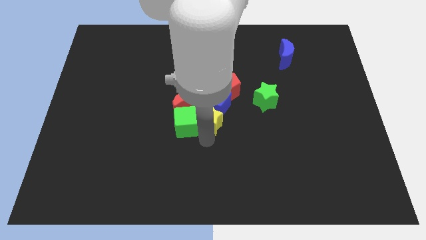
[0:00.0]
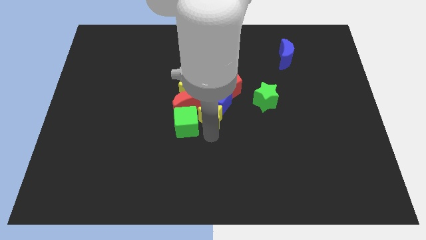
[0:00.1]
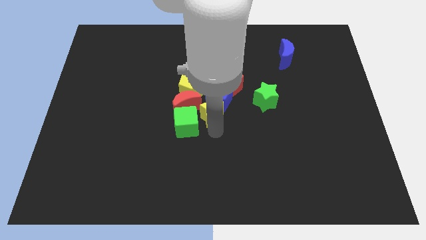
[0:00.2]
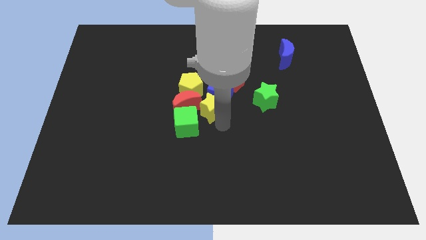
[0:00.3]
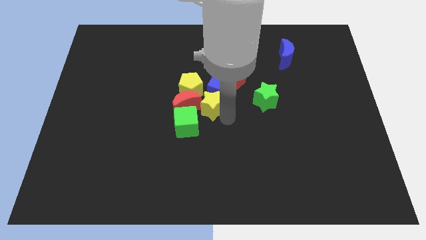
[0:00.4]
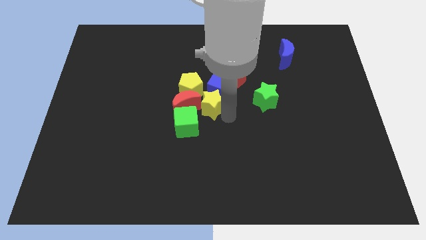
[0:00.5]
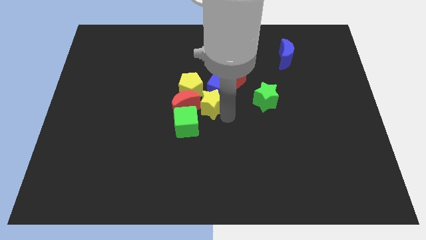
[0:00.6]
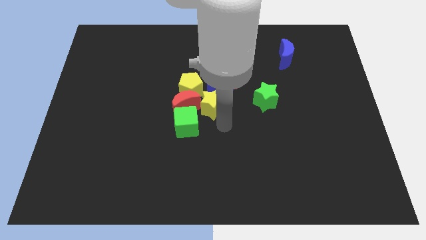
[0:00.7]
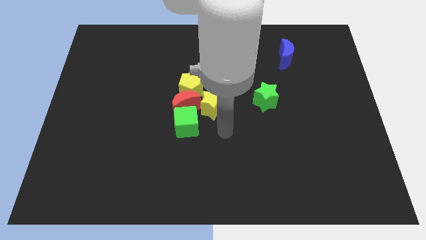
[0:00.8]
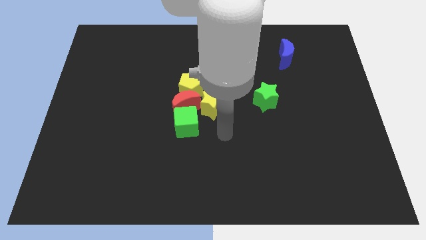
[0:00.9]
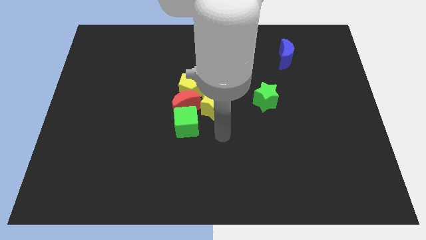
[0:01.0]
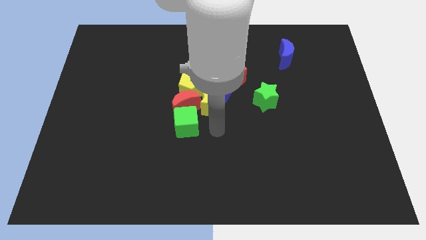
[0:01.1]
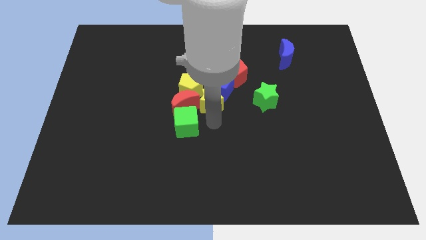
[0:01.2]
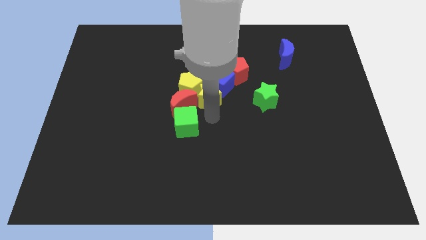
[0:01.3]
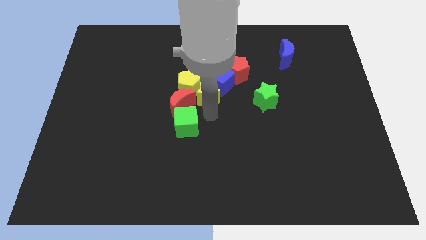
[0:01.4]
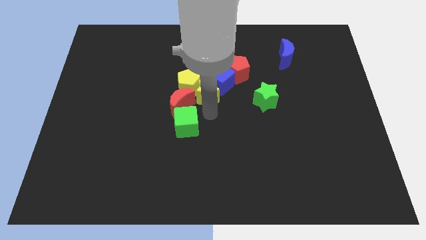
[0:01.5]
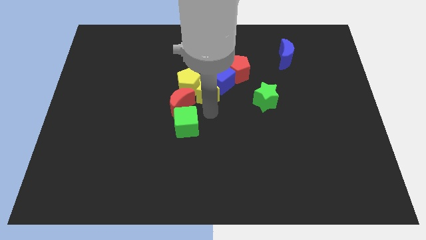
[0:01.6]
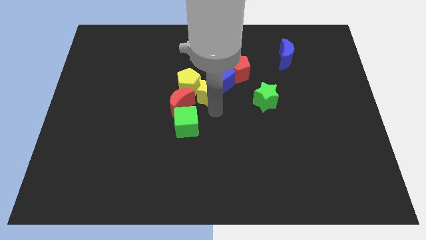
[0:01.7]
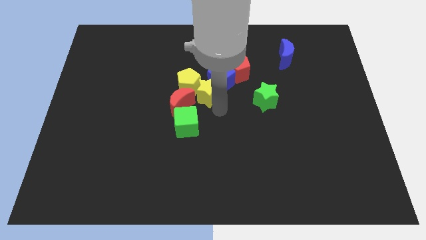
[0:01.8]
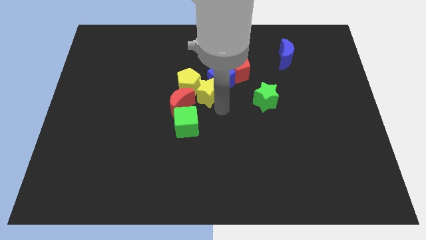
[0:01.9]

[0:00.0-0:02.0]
push the yellow star towards the left side of the yellow pentagon

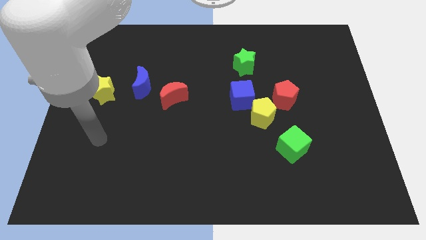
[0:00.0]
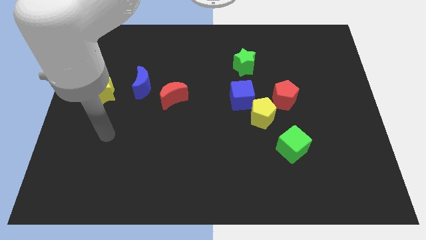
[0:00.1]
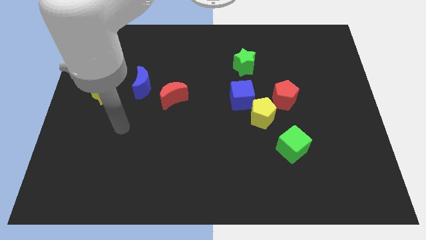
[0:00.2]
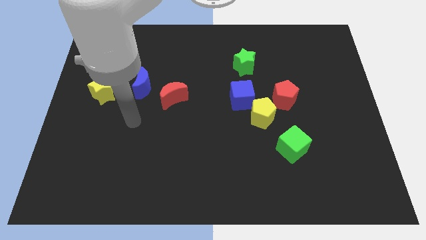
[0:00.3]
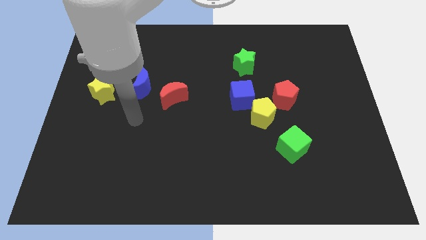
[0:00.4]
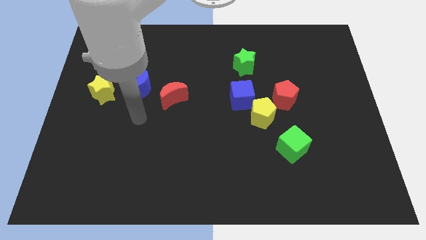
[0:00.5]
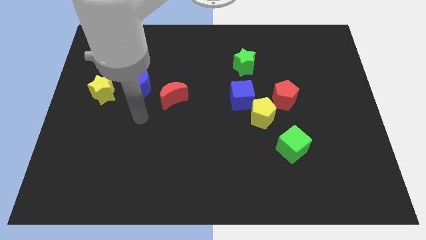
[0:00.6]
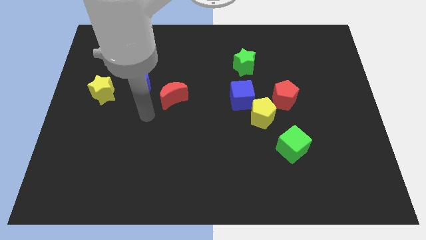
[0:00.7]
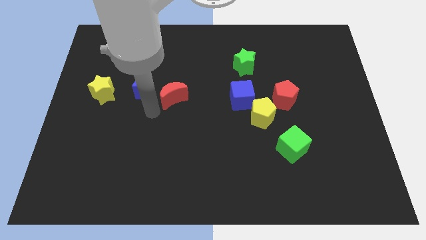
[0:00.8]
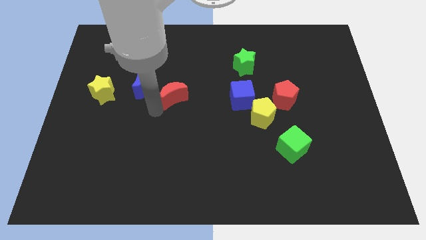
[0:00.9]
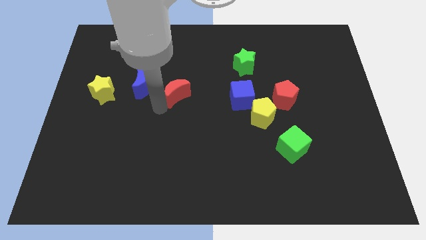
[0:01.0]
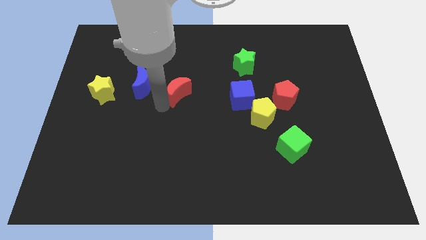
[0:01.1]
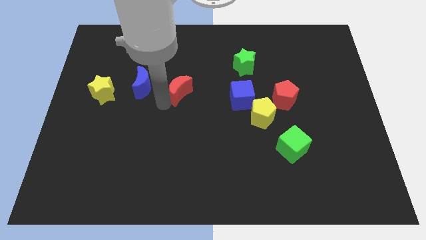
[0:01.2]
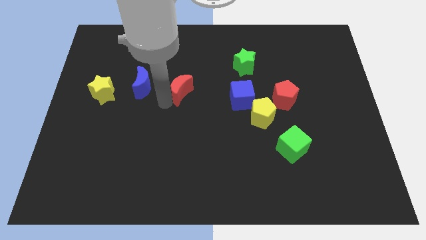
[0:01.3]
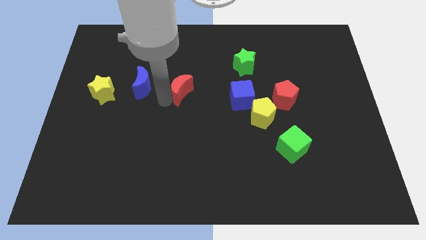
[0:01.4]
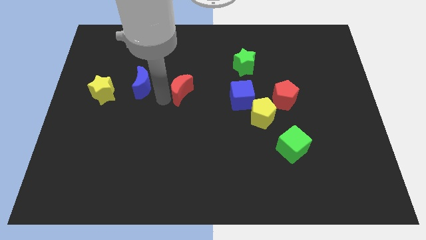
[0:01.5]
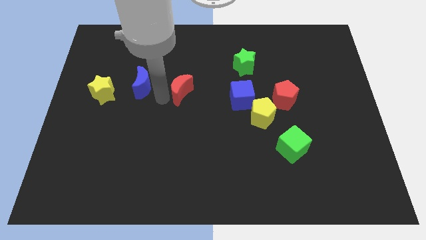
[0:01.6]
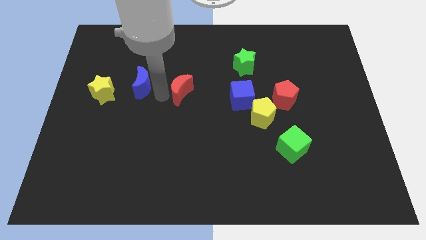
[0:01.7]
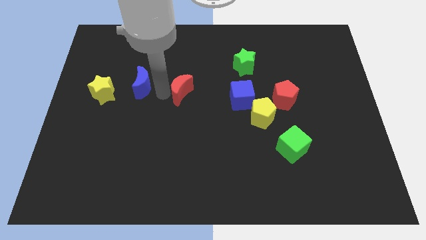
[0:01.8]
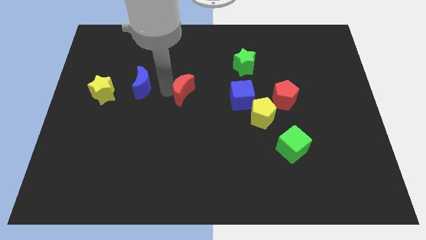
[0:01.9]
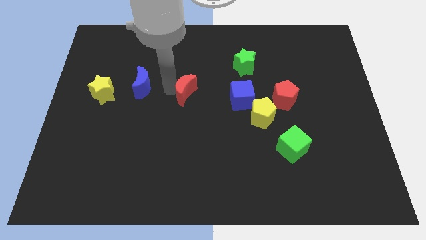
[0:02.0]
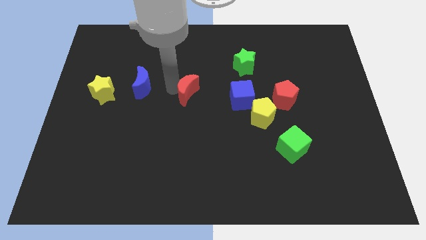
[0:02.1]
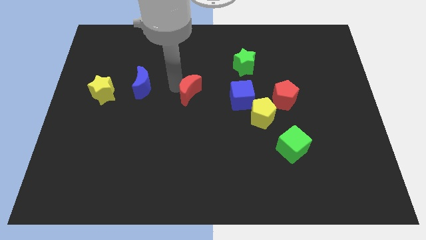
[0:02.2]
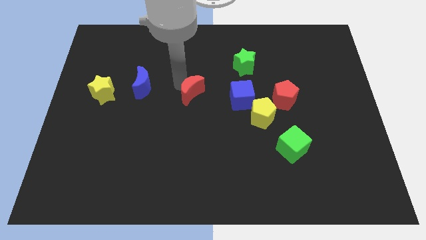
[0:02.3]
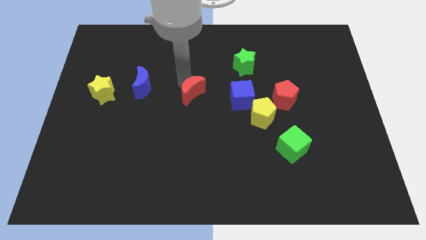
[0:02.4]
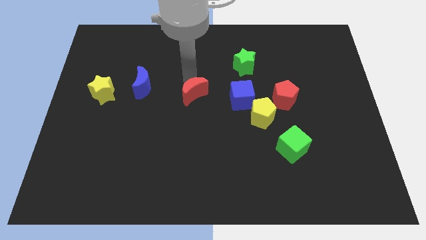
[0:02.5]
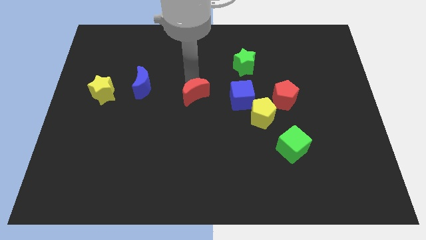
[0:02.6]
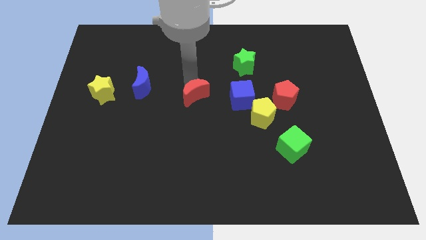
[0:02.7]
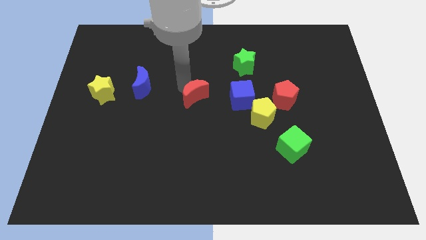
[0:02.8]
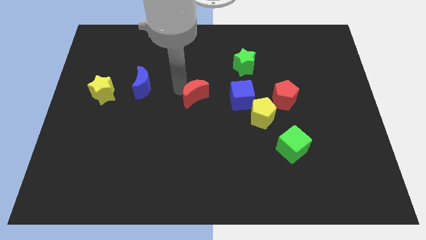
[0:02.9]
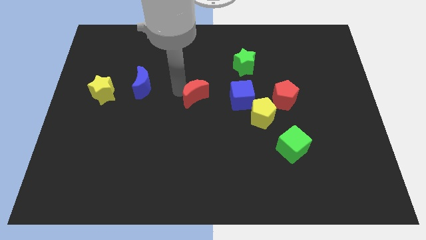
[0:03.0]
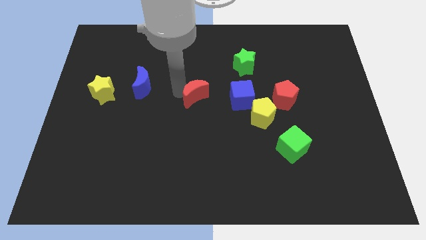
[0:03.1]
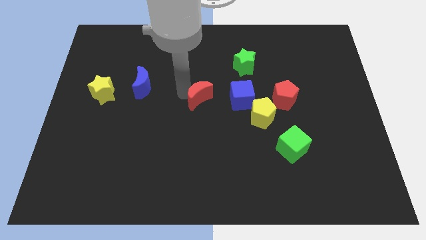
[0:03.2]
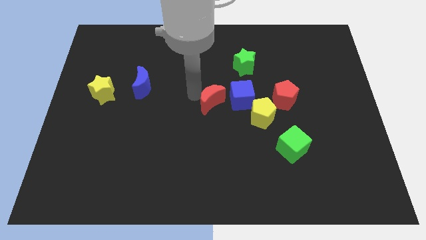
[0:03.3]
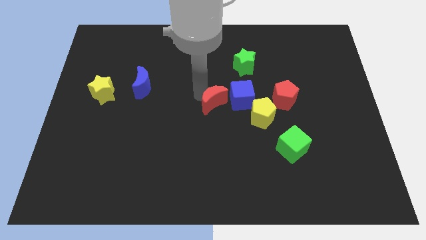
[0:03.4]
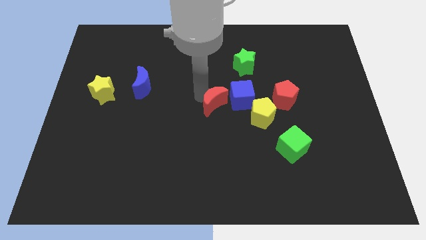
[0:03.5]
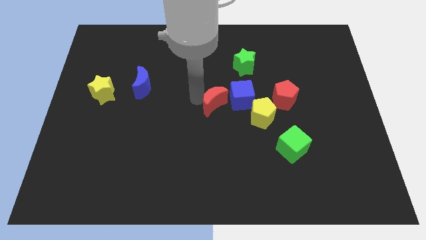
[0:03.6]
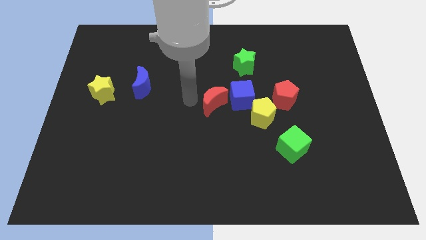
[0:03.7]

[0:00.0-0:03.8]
move red crescent to the left of blue cube

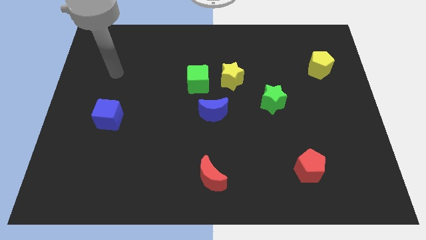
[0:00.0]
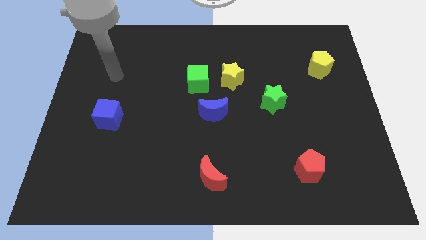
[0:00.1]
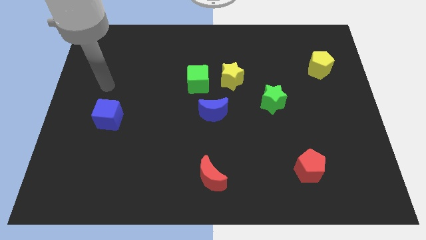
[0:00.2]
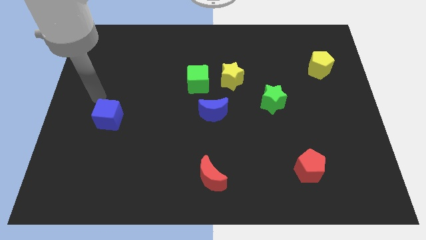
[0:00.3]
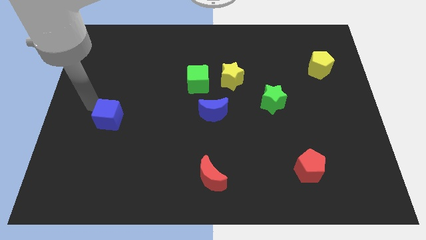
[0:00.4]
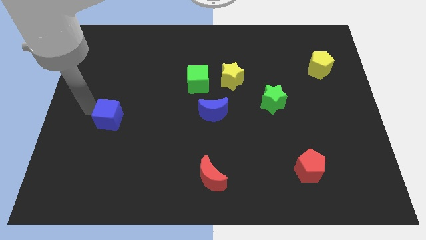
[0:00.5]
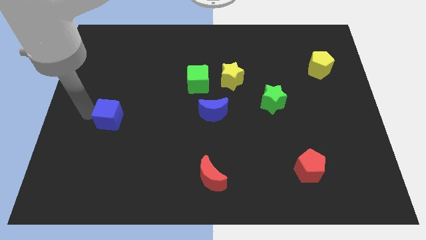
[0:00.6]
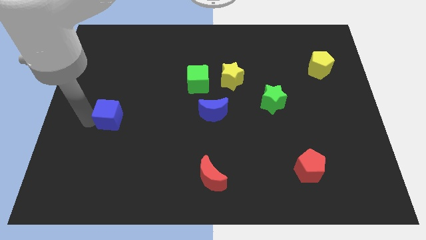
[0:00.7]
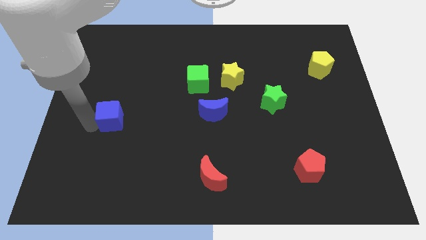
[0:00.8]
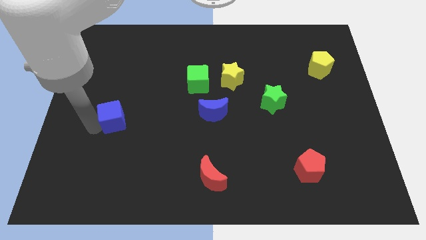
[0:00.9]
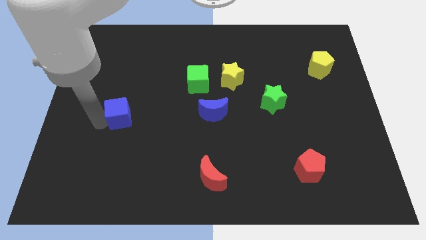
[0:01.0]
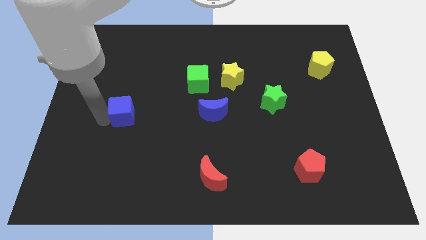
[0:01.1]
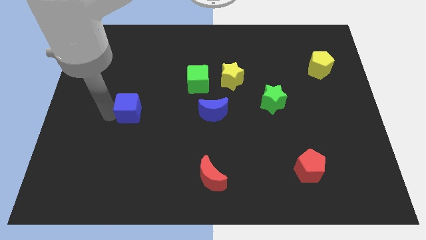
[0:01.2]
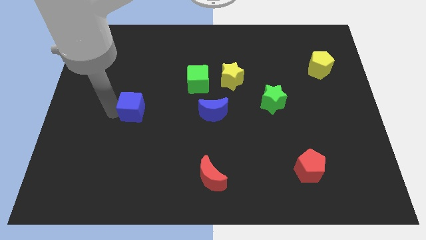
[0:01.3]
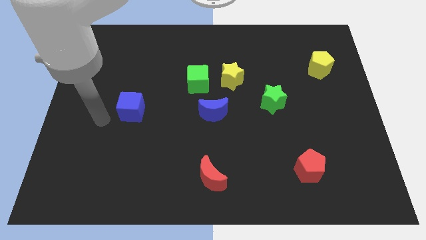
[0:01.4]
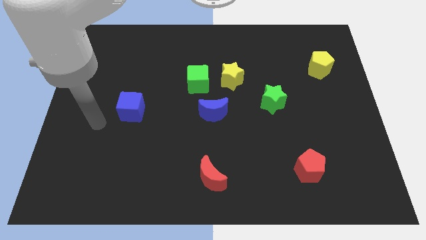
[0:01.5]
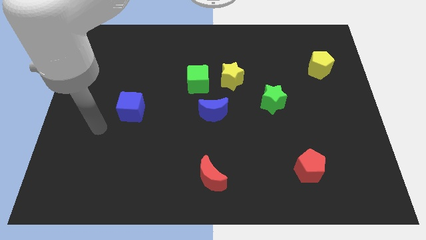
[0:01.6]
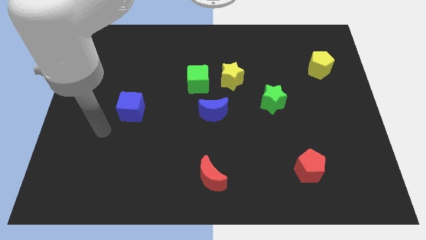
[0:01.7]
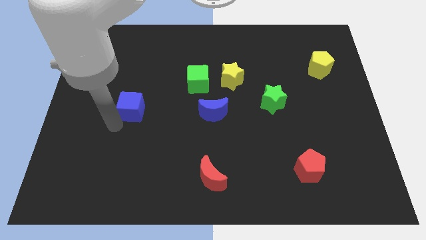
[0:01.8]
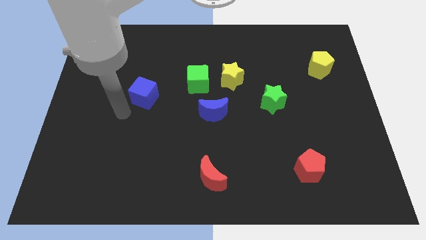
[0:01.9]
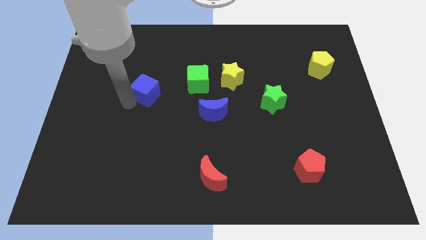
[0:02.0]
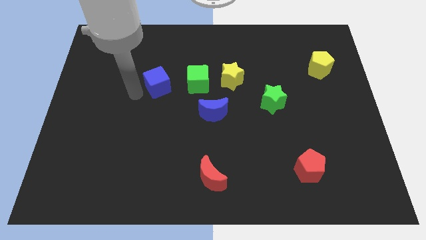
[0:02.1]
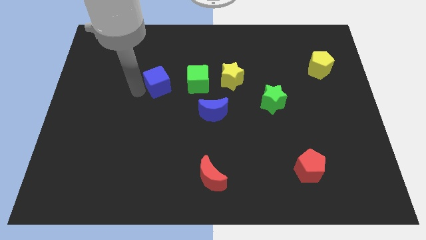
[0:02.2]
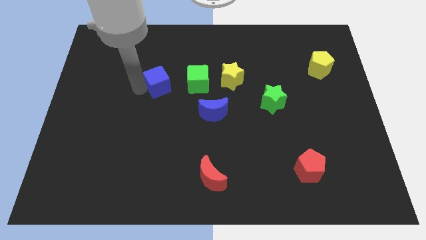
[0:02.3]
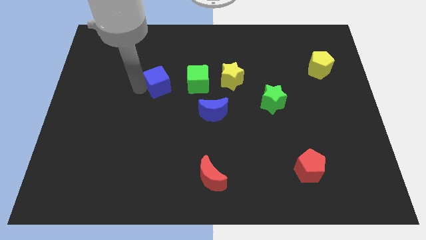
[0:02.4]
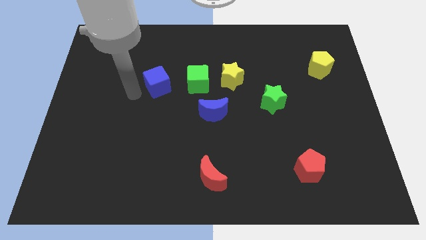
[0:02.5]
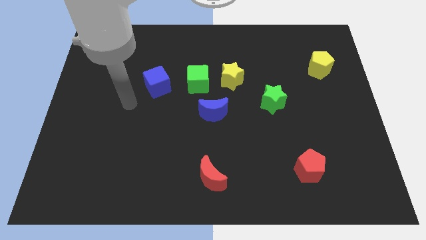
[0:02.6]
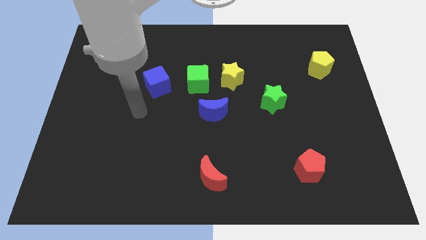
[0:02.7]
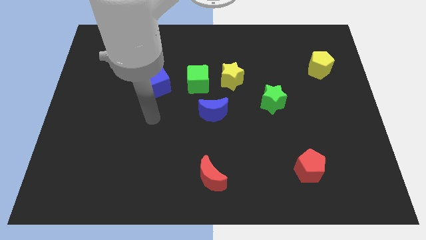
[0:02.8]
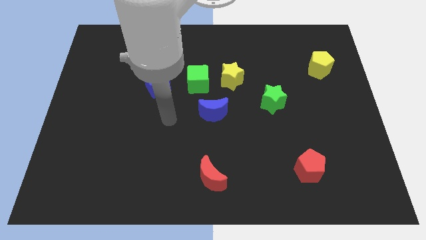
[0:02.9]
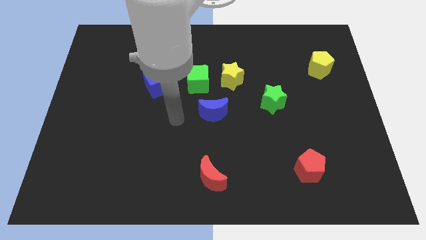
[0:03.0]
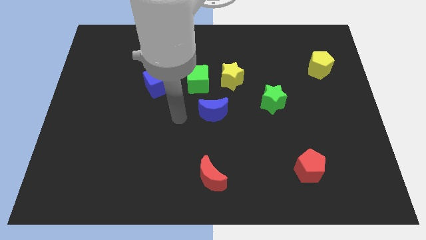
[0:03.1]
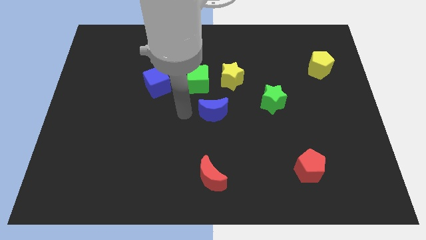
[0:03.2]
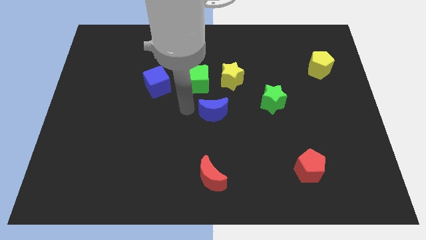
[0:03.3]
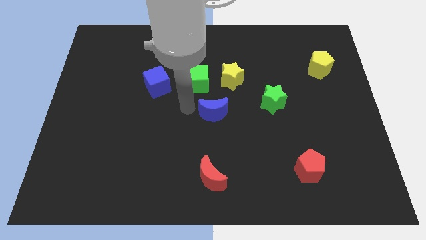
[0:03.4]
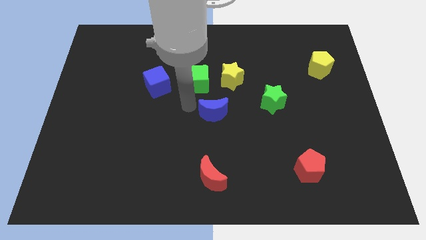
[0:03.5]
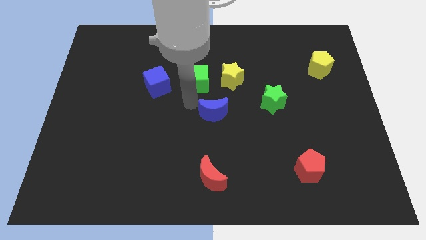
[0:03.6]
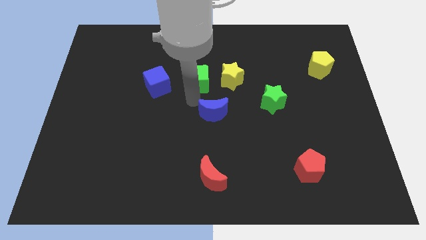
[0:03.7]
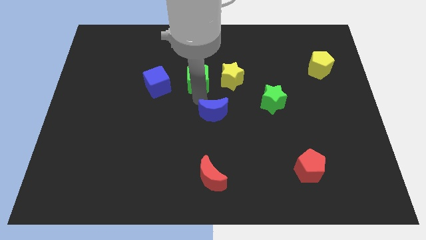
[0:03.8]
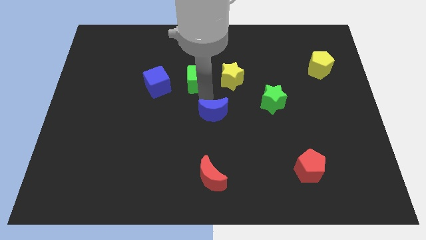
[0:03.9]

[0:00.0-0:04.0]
push blue cube to the left of green cube
